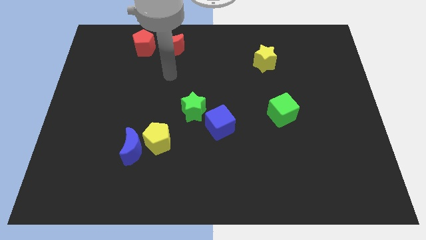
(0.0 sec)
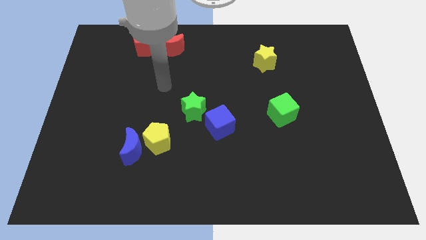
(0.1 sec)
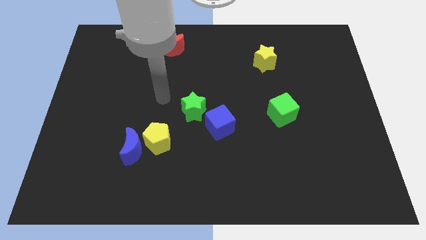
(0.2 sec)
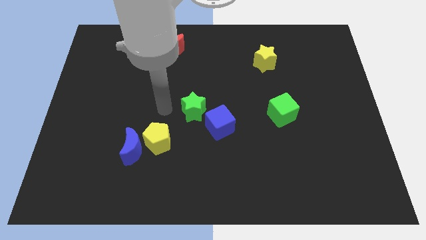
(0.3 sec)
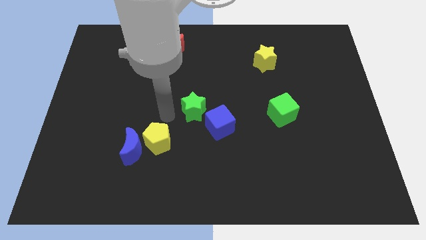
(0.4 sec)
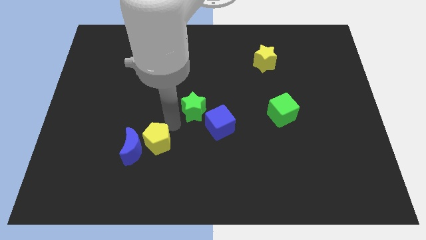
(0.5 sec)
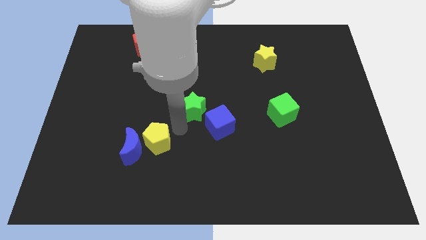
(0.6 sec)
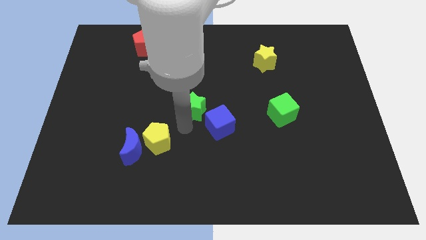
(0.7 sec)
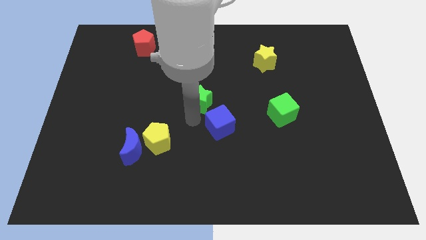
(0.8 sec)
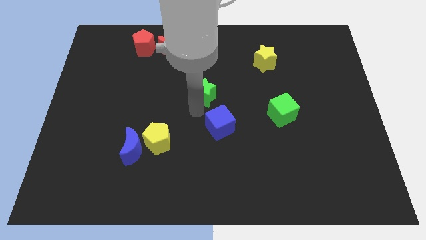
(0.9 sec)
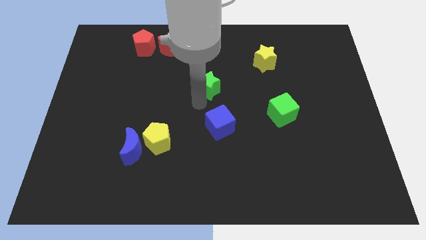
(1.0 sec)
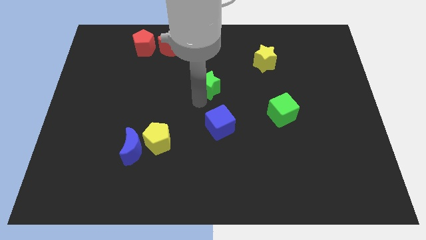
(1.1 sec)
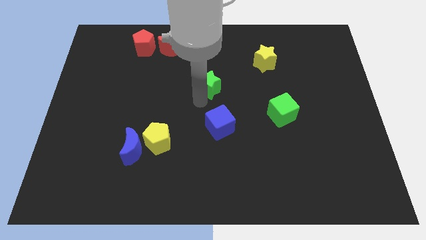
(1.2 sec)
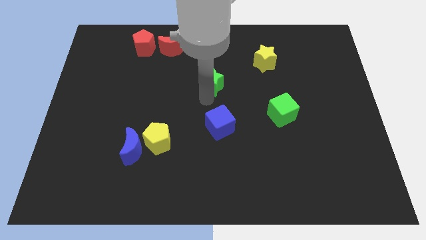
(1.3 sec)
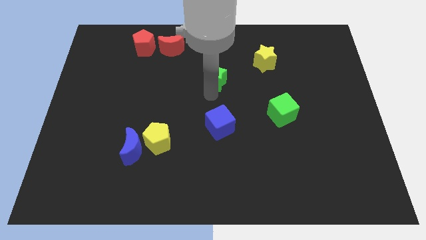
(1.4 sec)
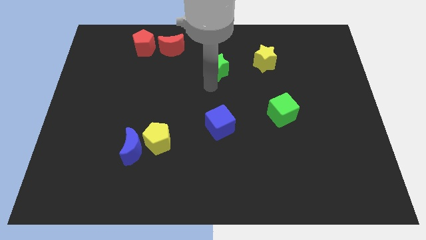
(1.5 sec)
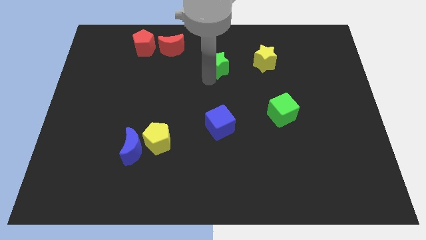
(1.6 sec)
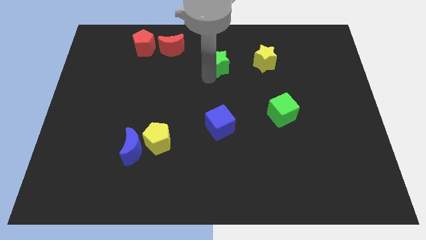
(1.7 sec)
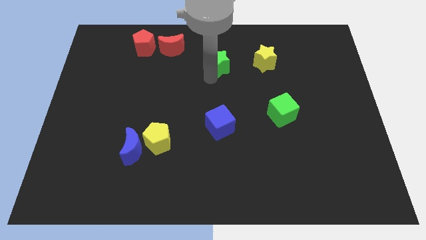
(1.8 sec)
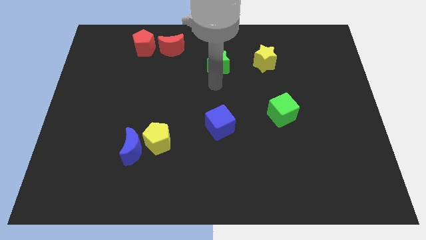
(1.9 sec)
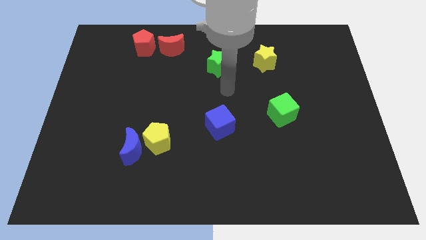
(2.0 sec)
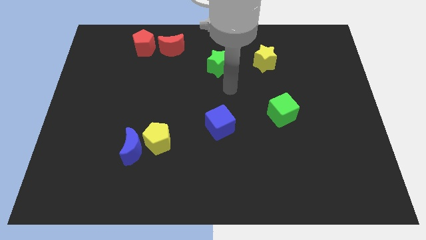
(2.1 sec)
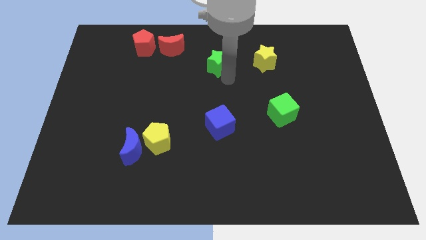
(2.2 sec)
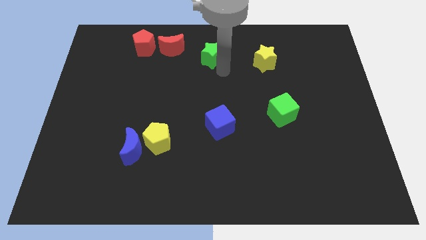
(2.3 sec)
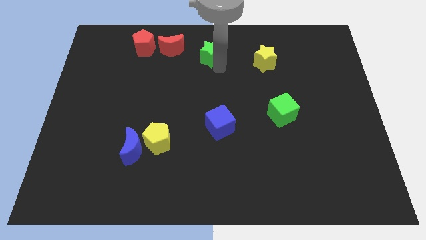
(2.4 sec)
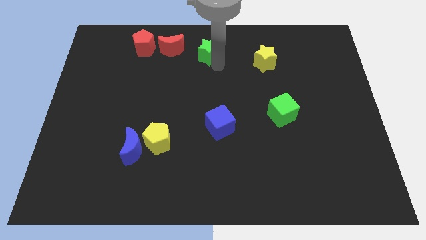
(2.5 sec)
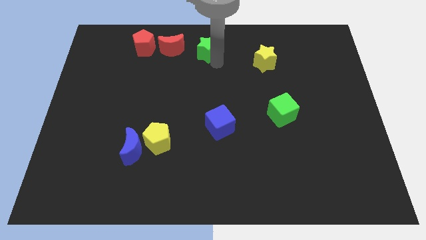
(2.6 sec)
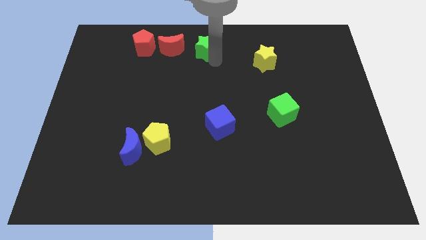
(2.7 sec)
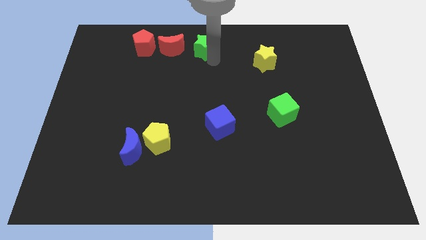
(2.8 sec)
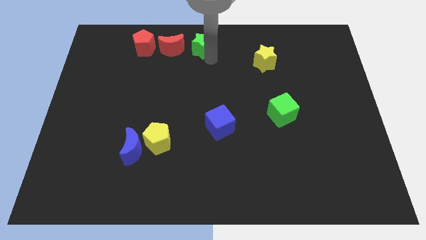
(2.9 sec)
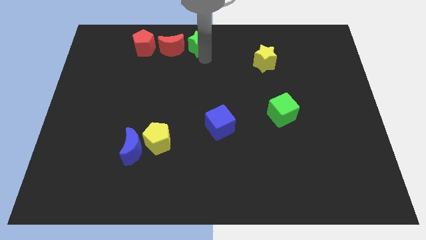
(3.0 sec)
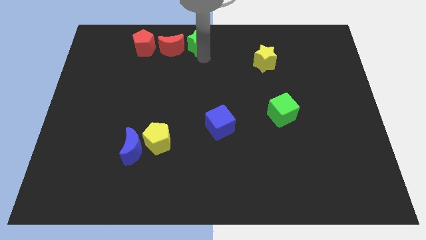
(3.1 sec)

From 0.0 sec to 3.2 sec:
place the green star at right side of the red crescent

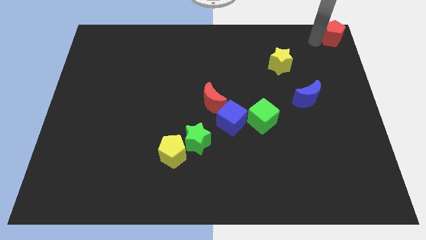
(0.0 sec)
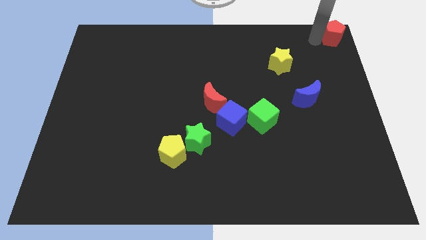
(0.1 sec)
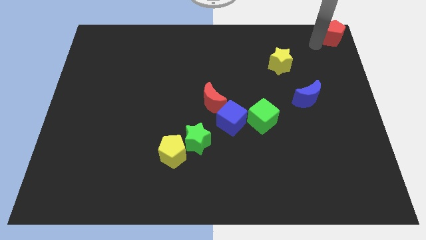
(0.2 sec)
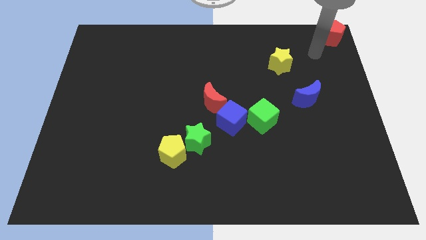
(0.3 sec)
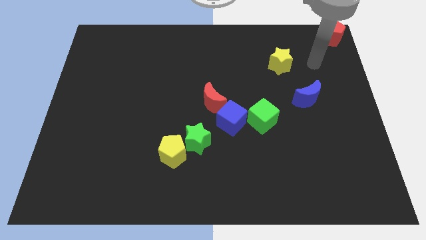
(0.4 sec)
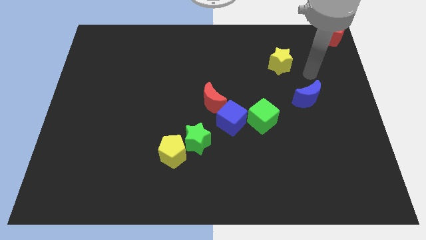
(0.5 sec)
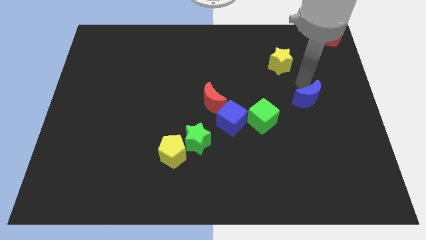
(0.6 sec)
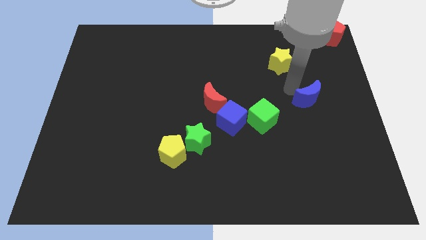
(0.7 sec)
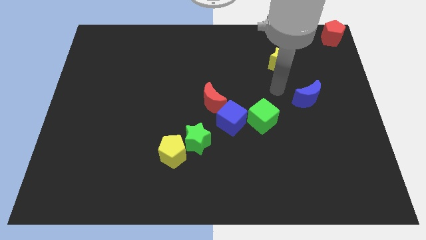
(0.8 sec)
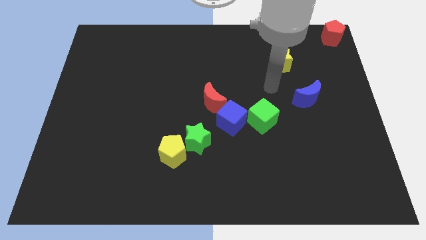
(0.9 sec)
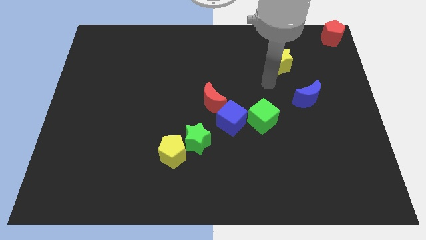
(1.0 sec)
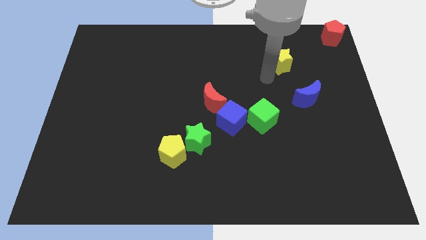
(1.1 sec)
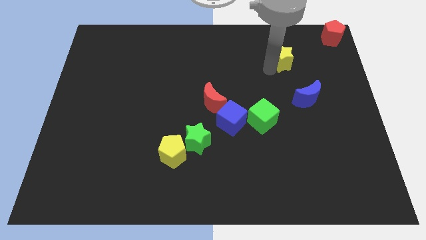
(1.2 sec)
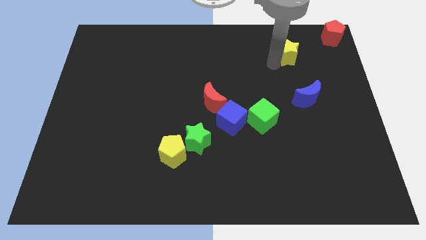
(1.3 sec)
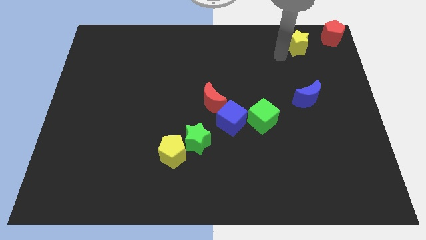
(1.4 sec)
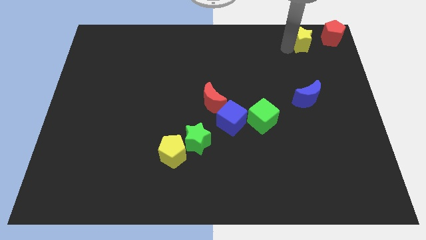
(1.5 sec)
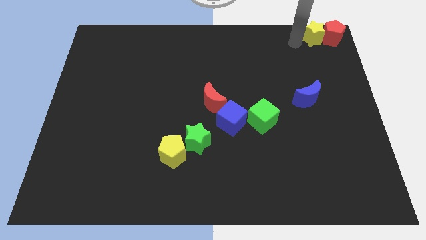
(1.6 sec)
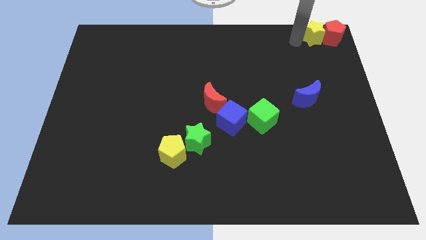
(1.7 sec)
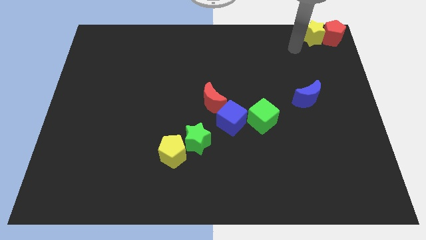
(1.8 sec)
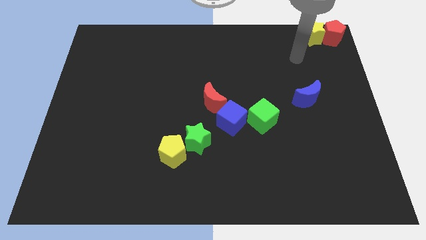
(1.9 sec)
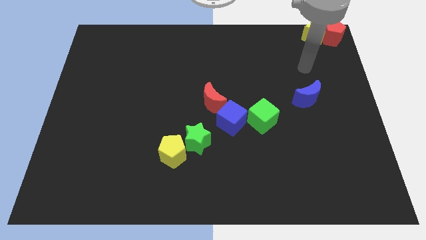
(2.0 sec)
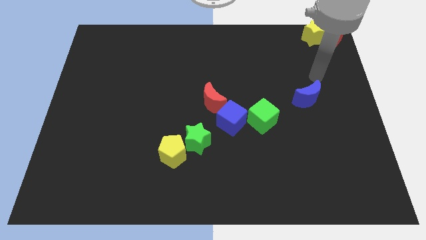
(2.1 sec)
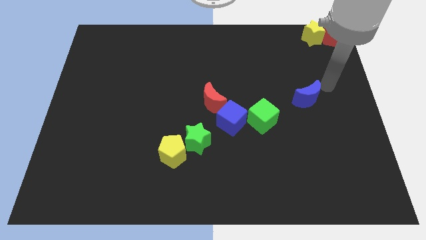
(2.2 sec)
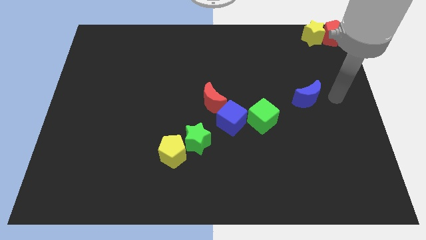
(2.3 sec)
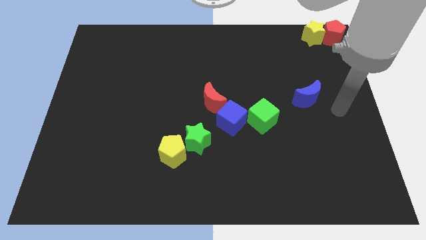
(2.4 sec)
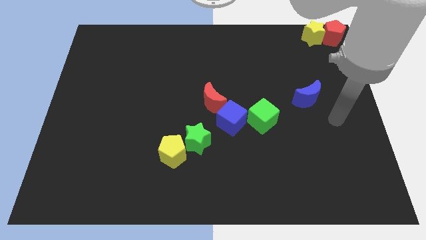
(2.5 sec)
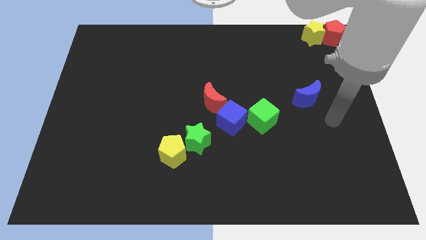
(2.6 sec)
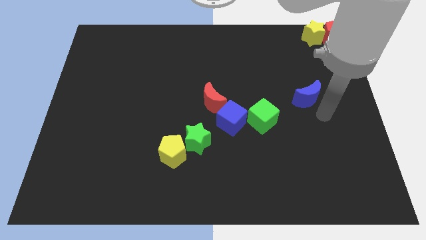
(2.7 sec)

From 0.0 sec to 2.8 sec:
place the yellow star left to red pentagon

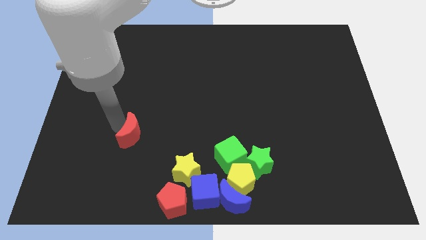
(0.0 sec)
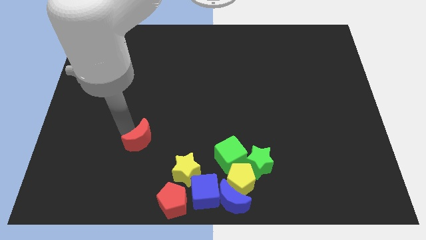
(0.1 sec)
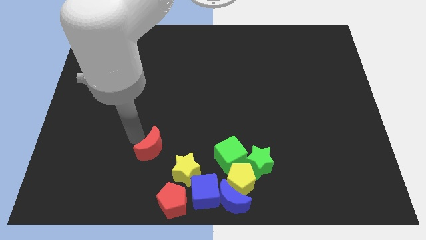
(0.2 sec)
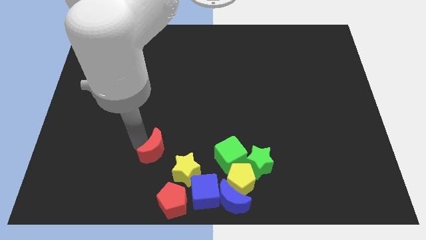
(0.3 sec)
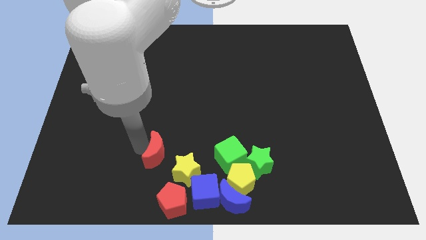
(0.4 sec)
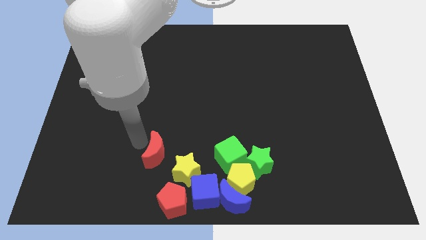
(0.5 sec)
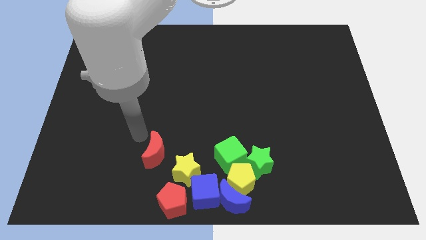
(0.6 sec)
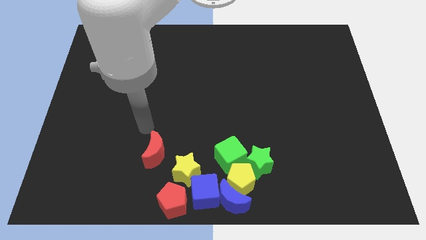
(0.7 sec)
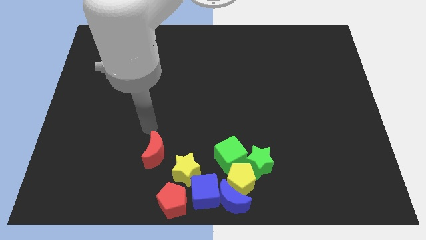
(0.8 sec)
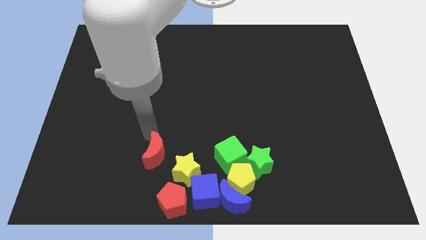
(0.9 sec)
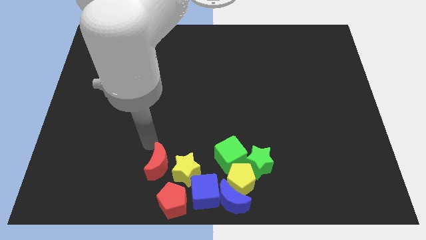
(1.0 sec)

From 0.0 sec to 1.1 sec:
push the red crescent towards the red pentagon

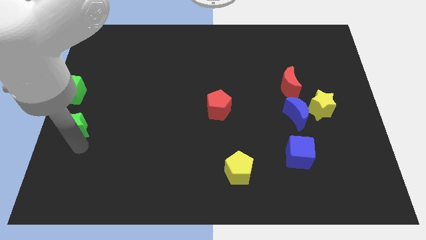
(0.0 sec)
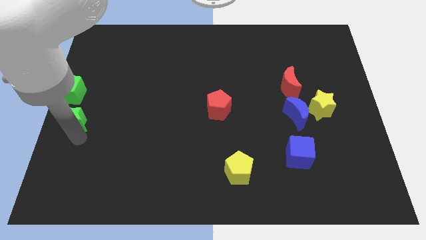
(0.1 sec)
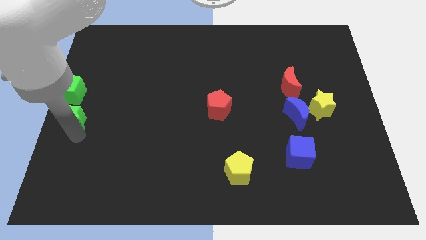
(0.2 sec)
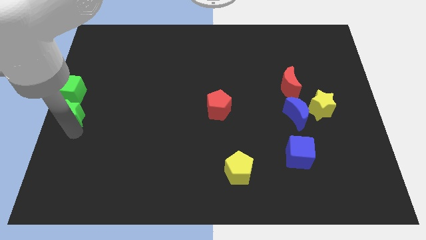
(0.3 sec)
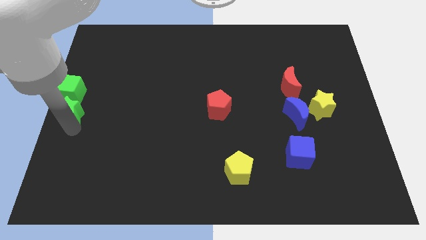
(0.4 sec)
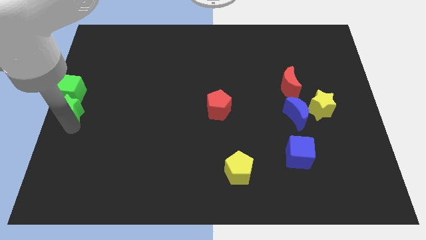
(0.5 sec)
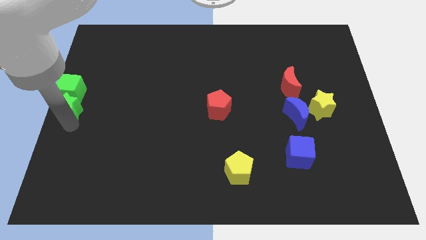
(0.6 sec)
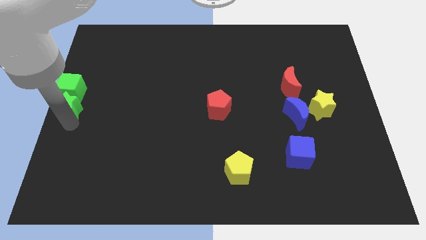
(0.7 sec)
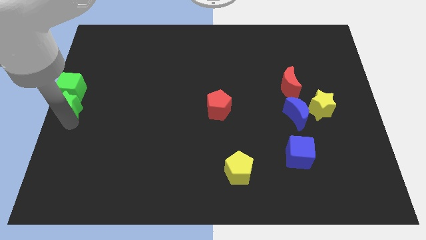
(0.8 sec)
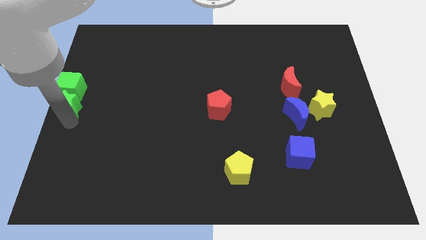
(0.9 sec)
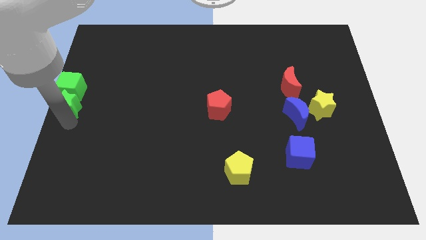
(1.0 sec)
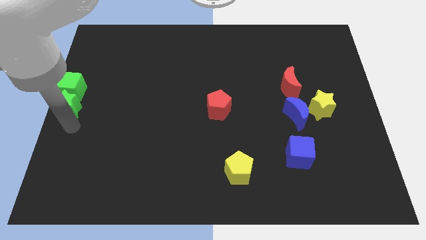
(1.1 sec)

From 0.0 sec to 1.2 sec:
place green star below green cube

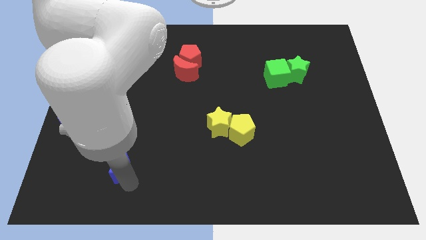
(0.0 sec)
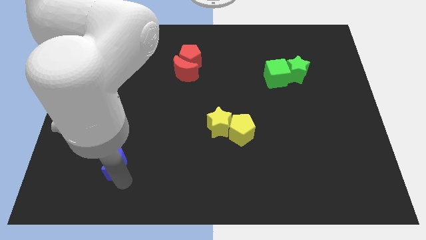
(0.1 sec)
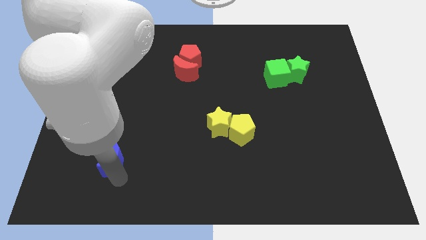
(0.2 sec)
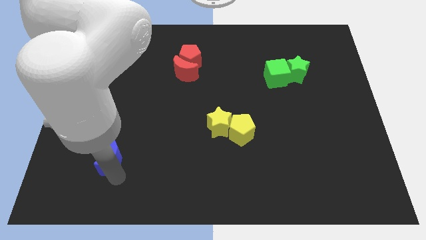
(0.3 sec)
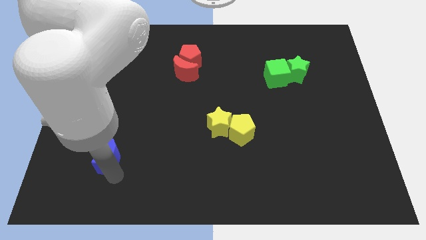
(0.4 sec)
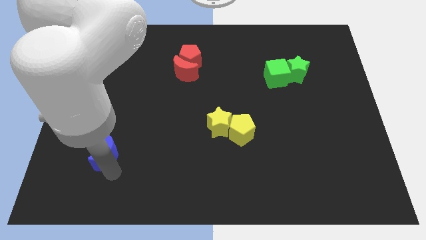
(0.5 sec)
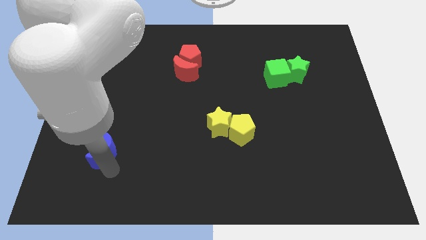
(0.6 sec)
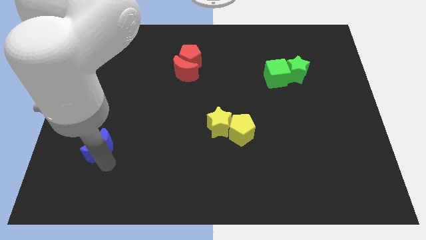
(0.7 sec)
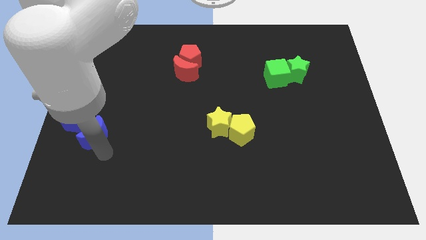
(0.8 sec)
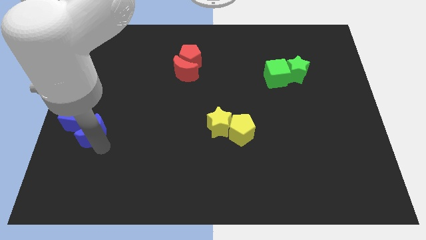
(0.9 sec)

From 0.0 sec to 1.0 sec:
place the blue crescent below the blue cube
